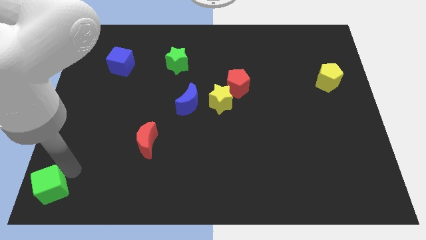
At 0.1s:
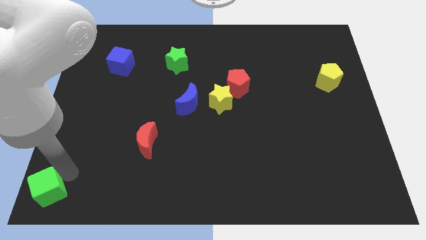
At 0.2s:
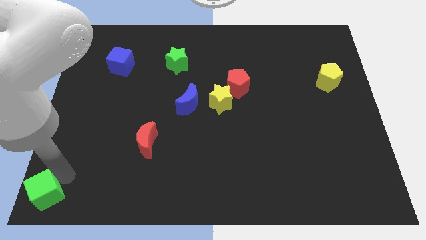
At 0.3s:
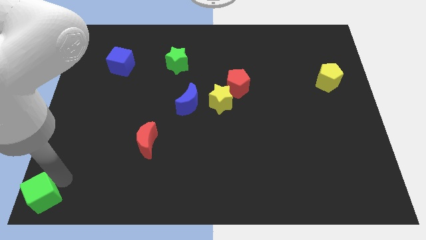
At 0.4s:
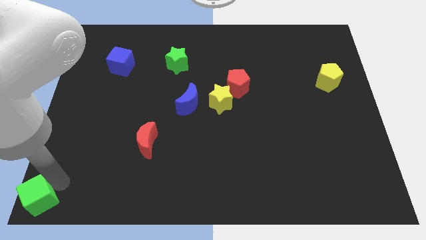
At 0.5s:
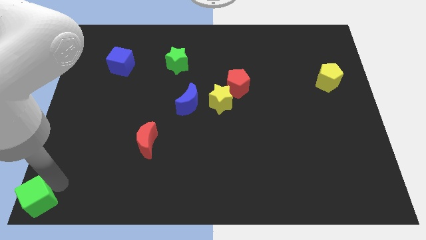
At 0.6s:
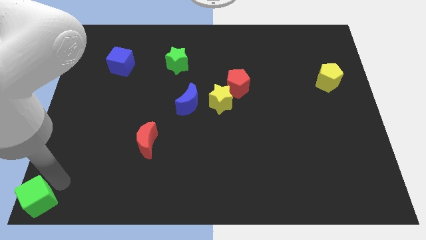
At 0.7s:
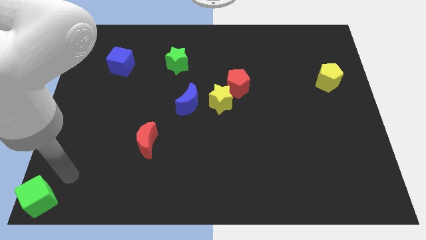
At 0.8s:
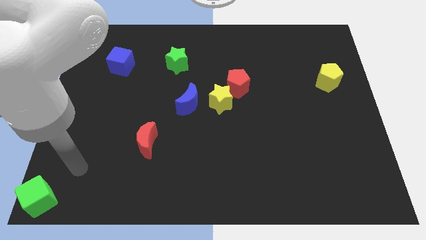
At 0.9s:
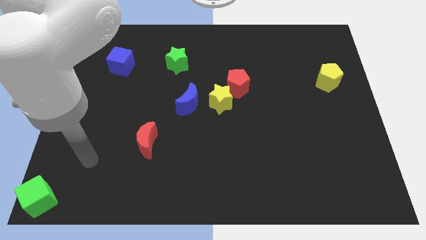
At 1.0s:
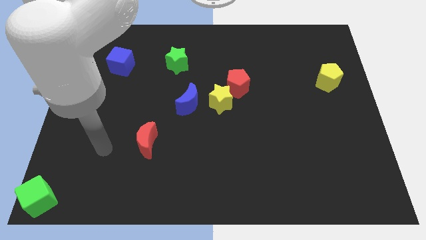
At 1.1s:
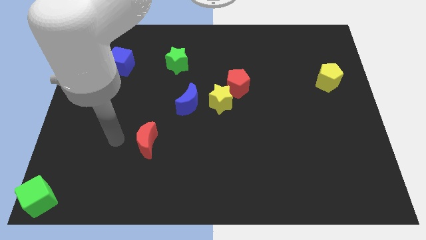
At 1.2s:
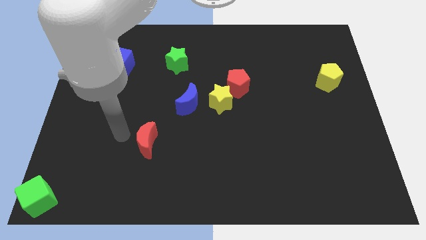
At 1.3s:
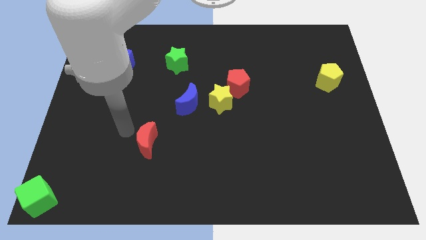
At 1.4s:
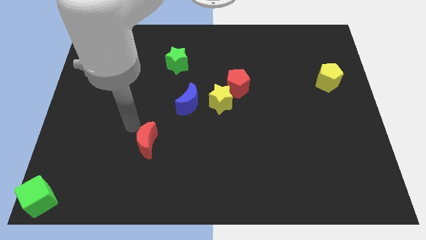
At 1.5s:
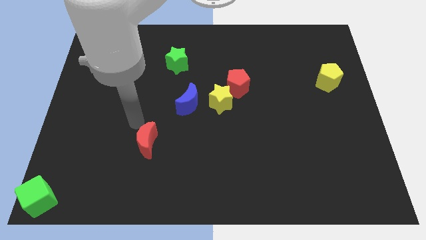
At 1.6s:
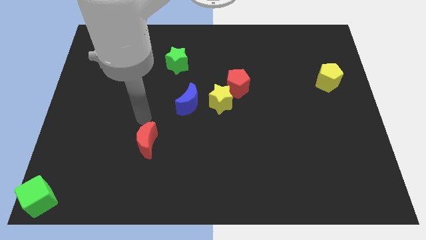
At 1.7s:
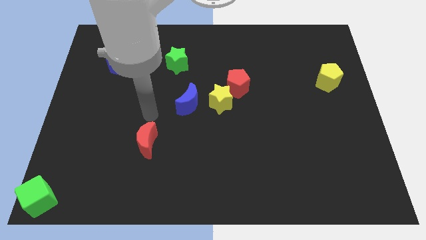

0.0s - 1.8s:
place your arm on top of red moon

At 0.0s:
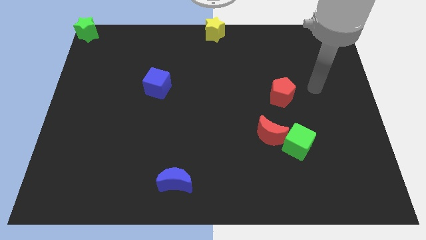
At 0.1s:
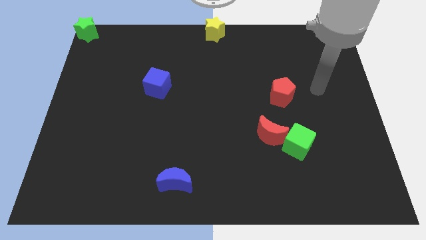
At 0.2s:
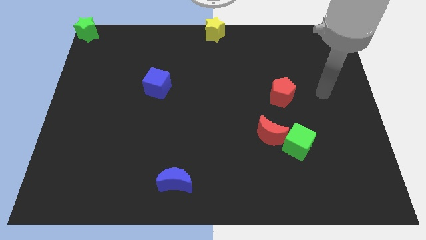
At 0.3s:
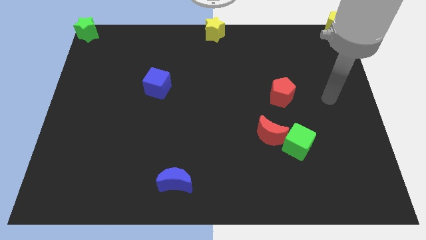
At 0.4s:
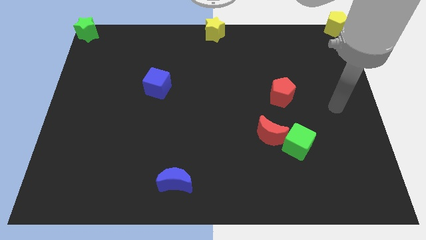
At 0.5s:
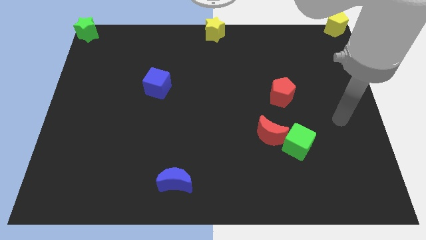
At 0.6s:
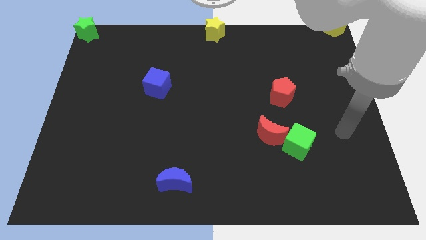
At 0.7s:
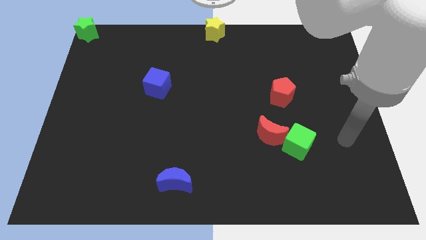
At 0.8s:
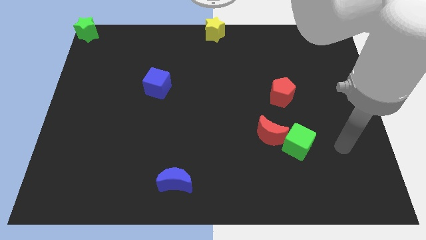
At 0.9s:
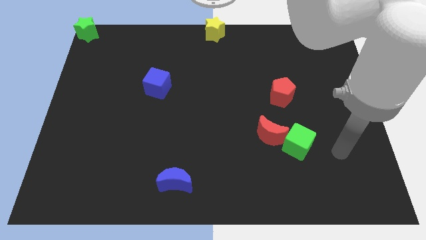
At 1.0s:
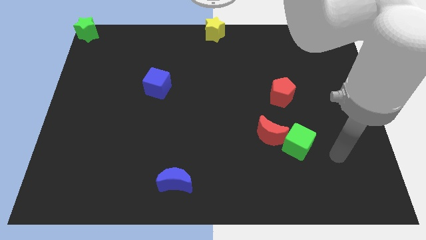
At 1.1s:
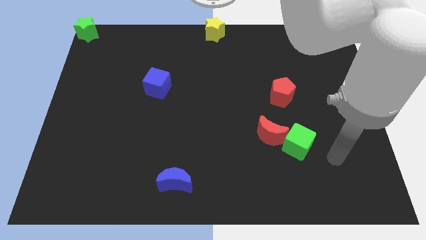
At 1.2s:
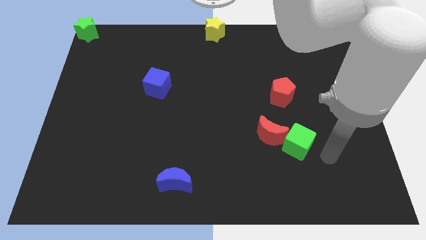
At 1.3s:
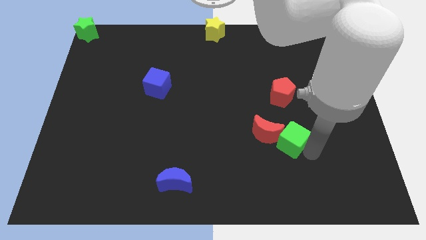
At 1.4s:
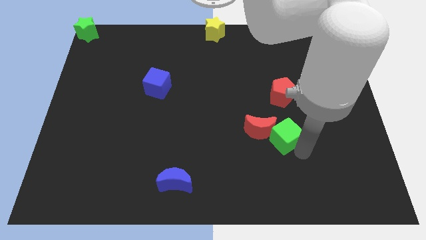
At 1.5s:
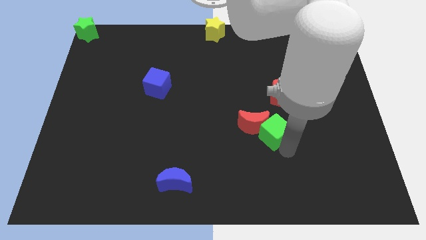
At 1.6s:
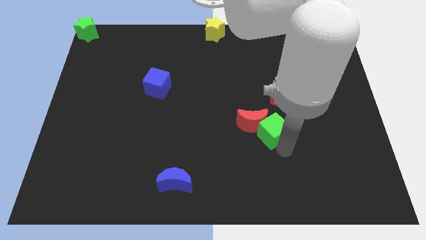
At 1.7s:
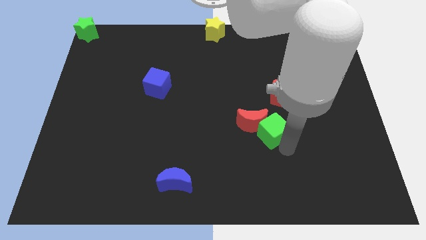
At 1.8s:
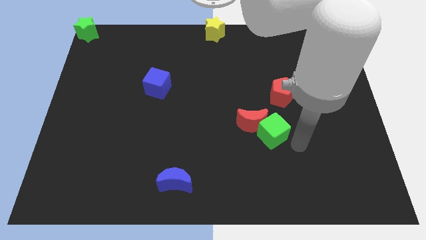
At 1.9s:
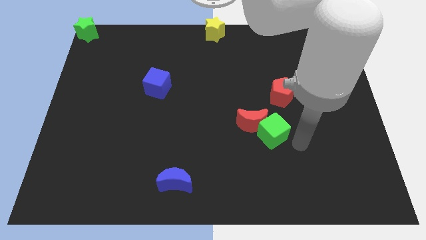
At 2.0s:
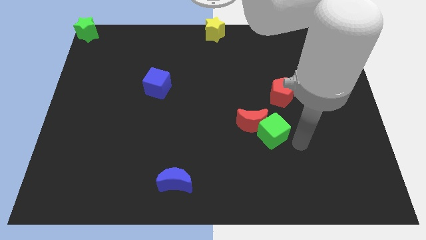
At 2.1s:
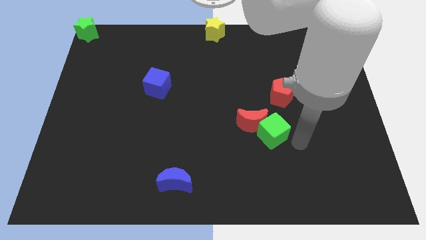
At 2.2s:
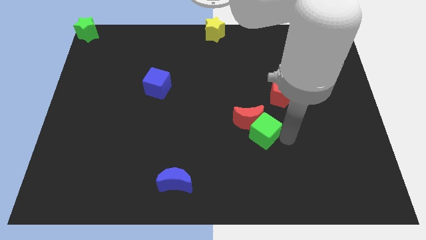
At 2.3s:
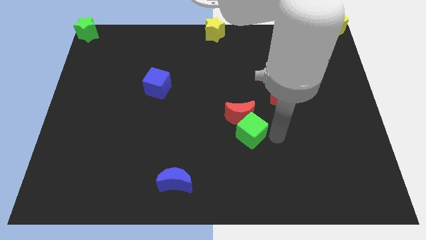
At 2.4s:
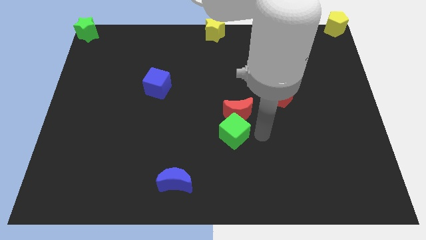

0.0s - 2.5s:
push the green cube and red moon towards center

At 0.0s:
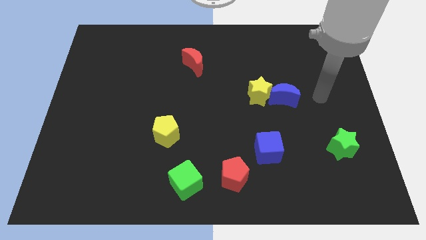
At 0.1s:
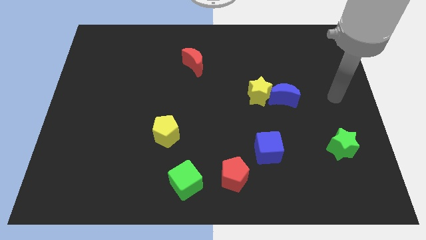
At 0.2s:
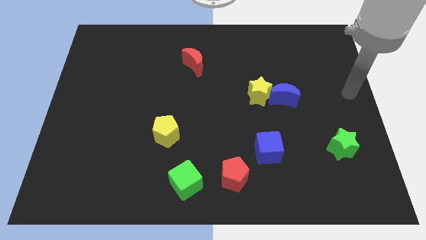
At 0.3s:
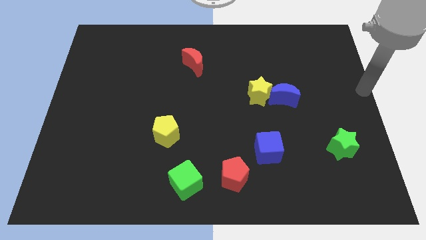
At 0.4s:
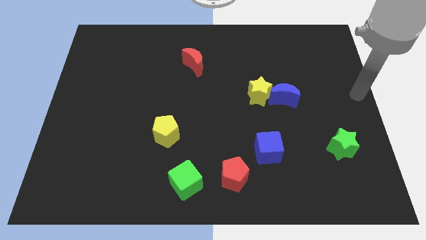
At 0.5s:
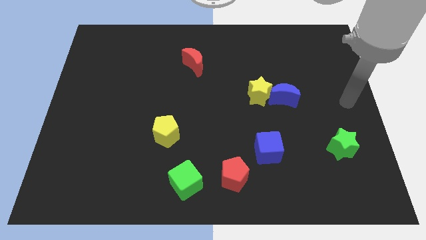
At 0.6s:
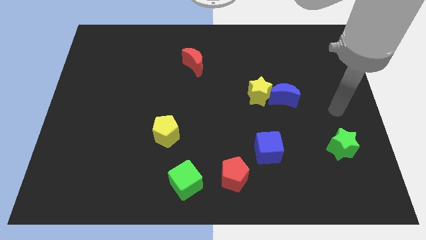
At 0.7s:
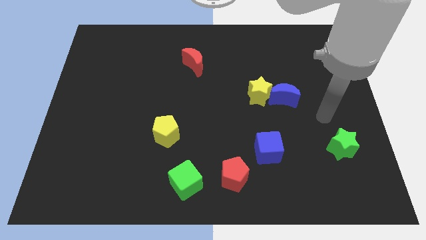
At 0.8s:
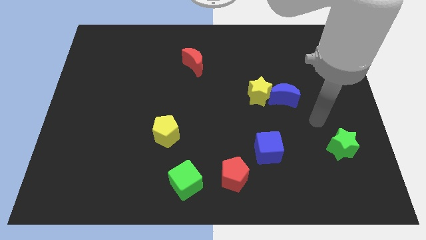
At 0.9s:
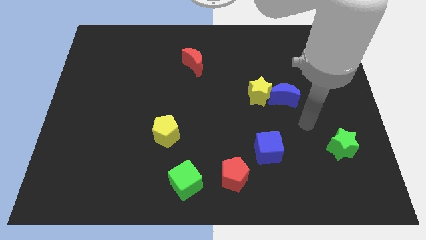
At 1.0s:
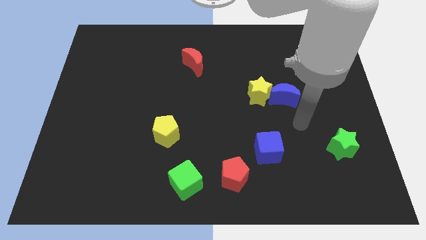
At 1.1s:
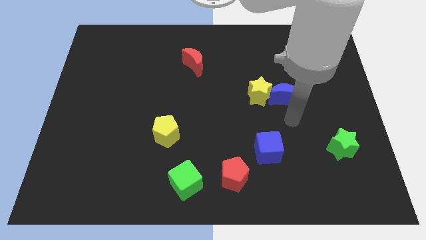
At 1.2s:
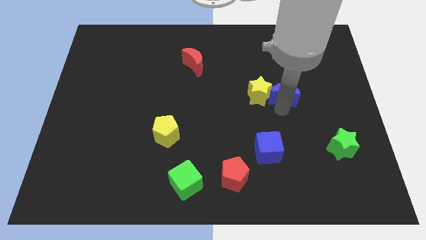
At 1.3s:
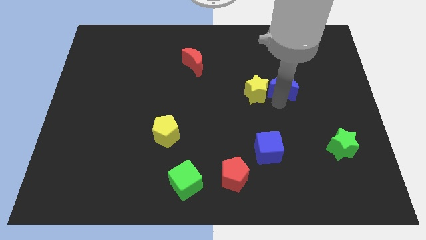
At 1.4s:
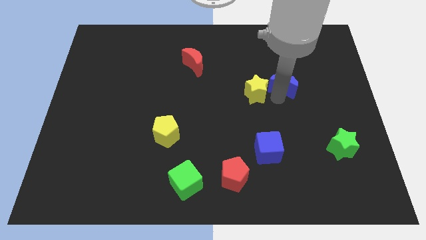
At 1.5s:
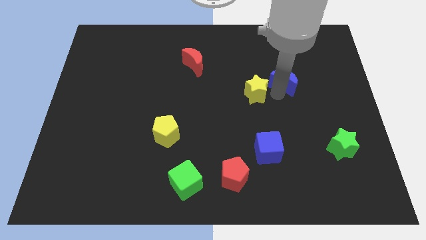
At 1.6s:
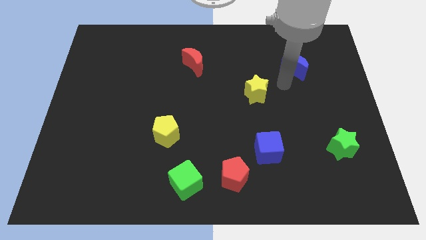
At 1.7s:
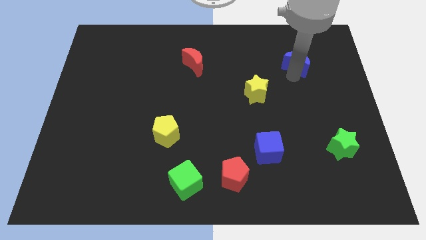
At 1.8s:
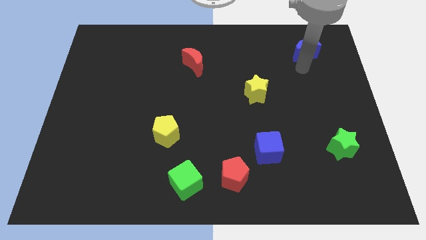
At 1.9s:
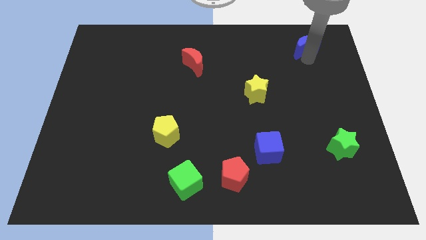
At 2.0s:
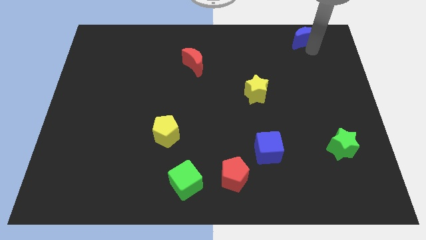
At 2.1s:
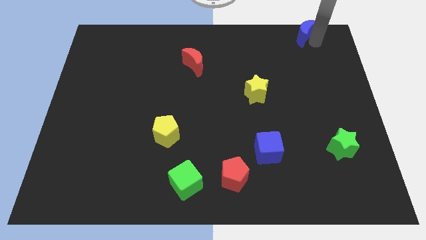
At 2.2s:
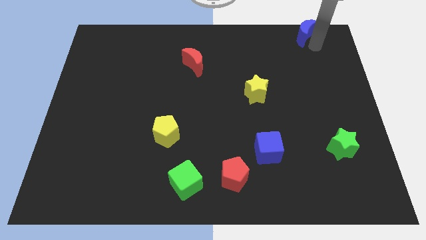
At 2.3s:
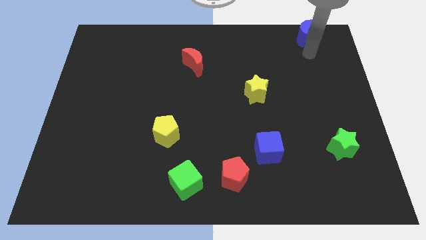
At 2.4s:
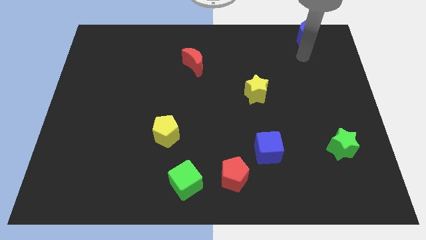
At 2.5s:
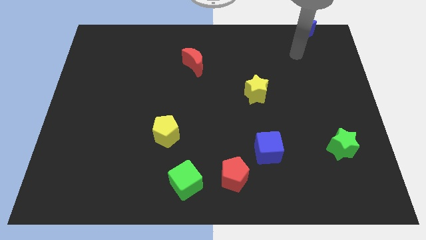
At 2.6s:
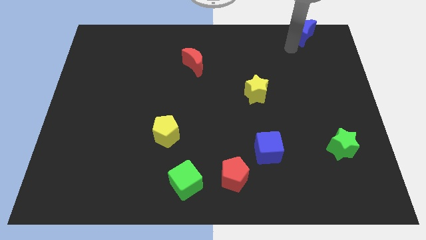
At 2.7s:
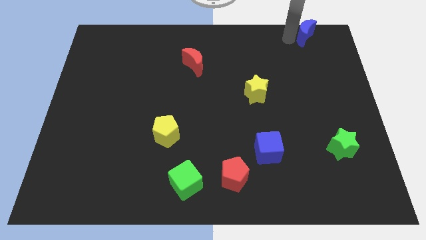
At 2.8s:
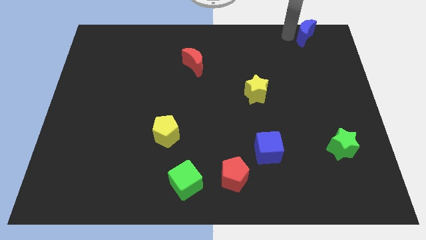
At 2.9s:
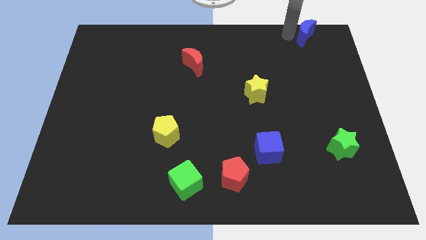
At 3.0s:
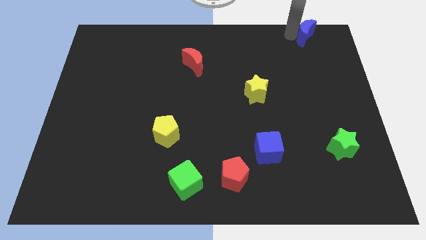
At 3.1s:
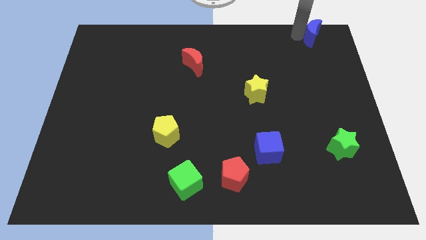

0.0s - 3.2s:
move blue crescent towards the top right corner

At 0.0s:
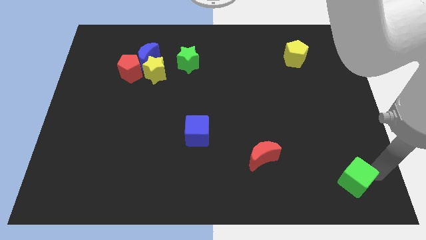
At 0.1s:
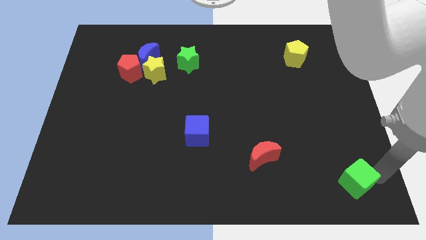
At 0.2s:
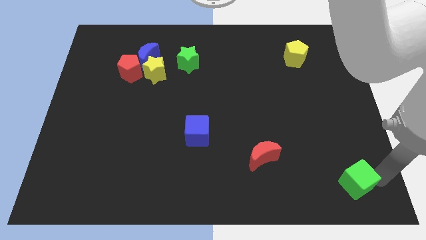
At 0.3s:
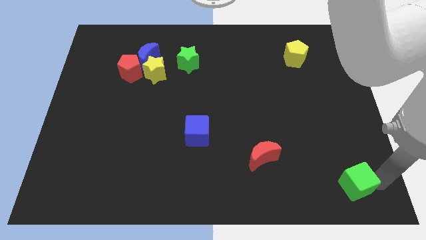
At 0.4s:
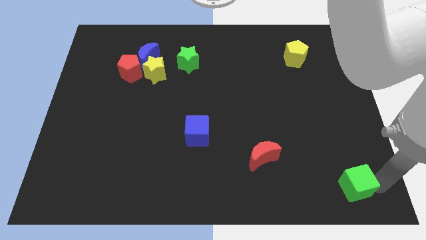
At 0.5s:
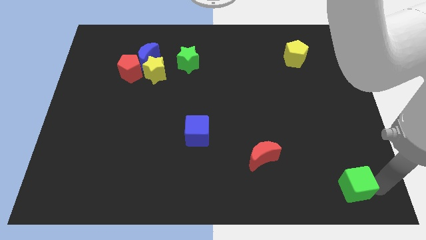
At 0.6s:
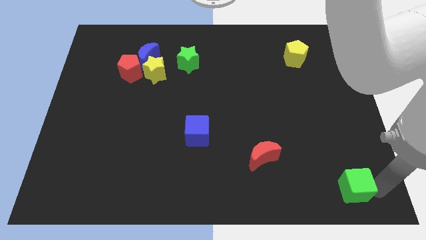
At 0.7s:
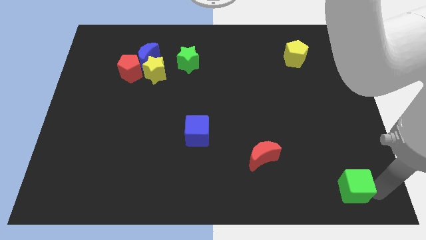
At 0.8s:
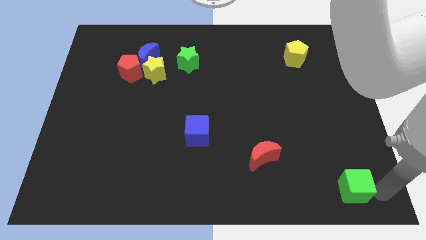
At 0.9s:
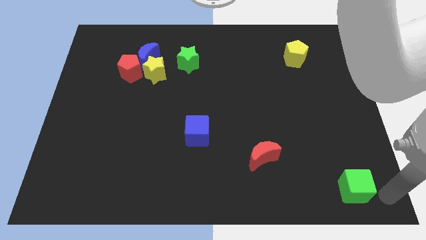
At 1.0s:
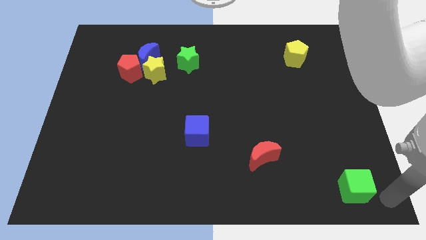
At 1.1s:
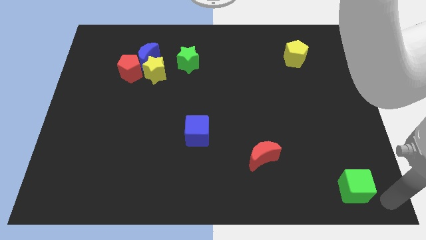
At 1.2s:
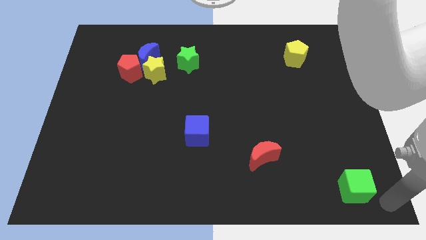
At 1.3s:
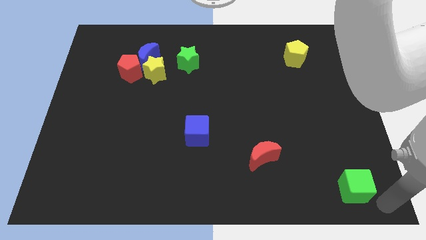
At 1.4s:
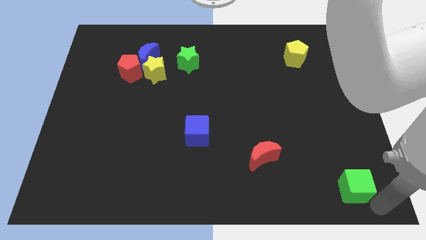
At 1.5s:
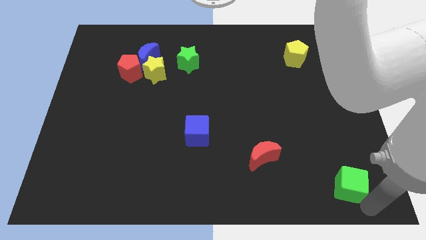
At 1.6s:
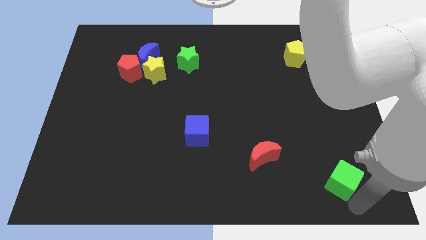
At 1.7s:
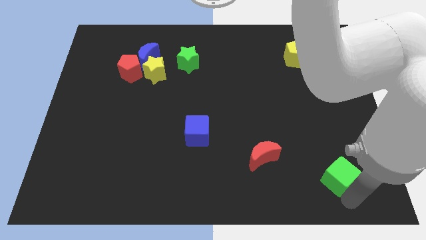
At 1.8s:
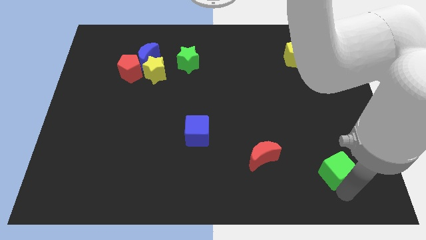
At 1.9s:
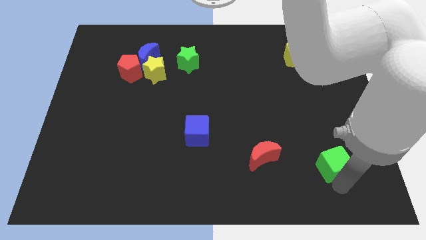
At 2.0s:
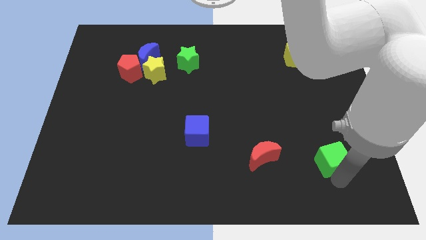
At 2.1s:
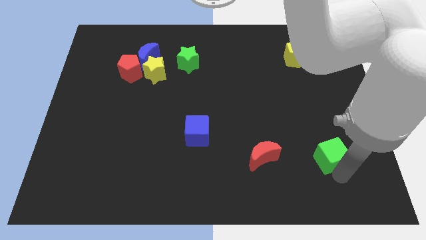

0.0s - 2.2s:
put the green cube right to the red moon
